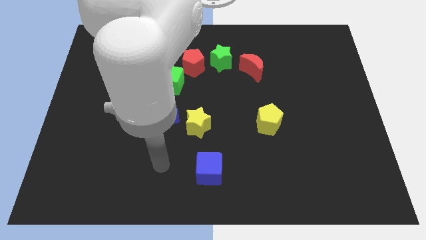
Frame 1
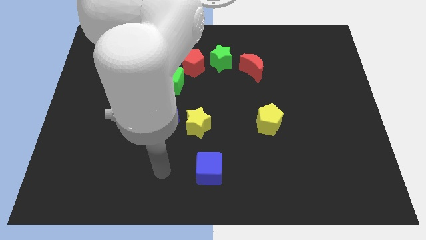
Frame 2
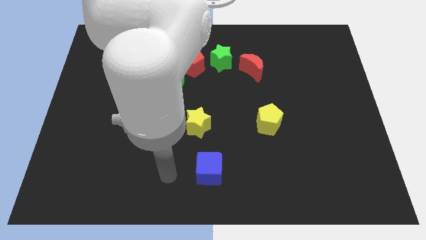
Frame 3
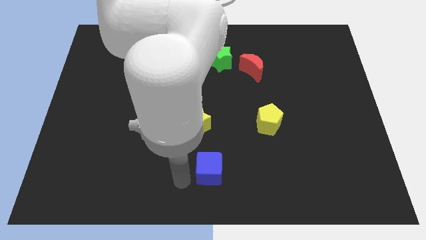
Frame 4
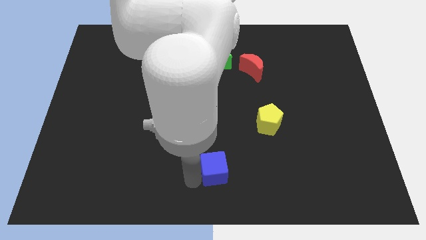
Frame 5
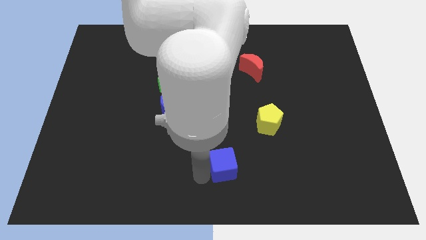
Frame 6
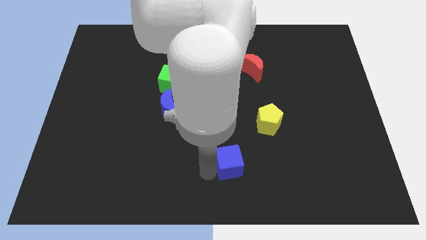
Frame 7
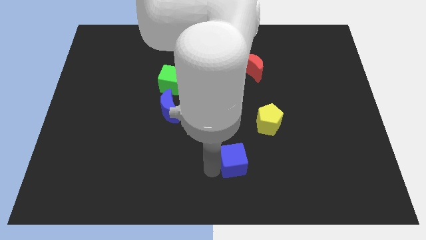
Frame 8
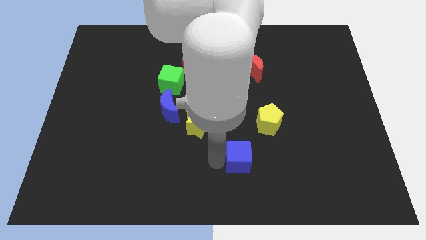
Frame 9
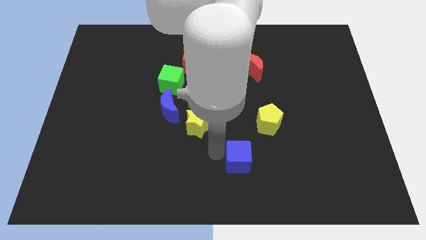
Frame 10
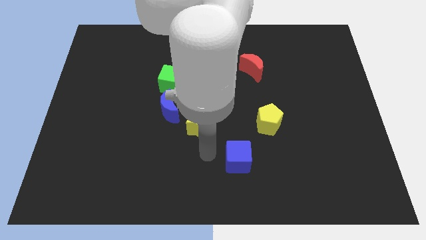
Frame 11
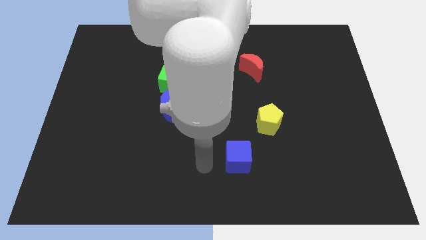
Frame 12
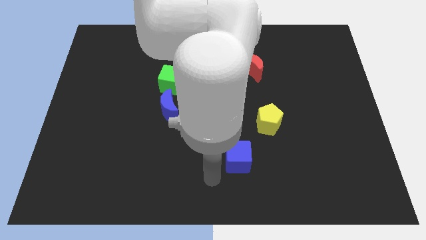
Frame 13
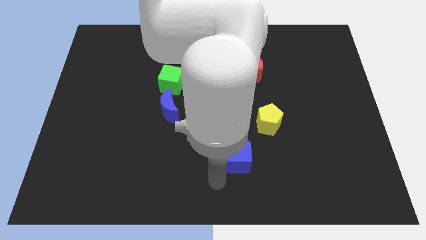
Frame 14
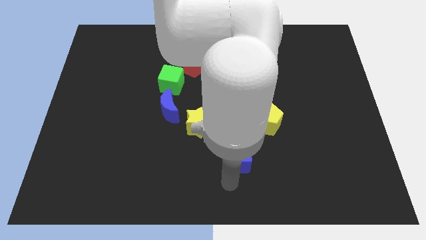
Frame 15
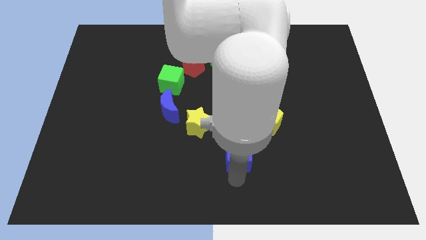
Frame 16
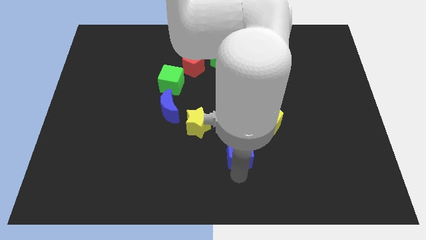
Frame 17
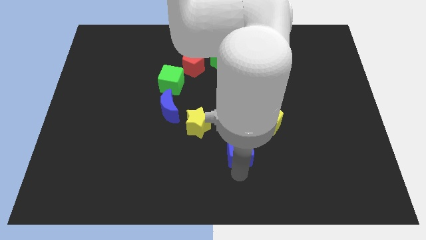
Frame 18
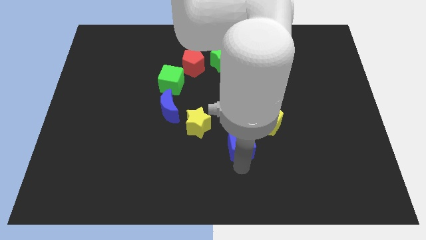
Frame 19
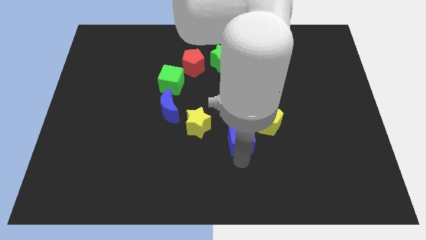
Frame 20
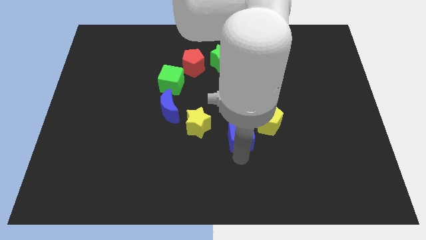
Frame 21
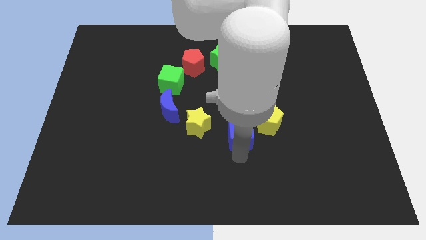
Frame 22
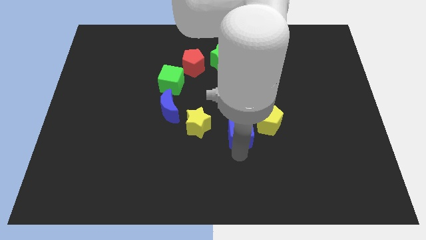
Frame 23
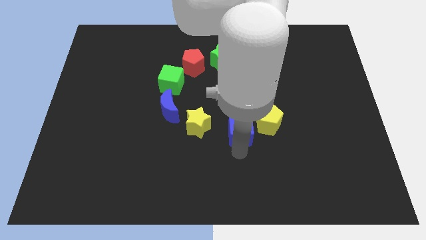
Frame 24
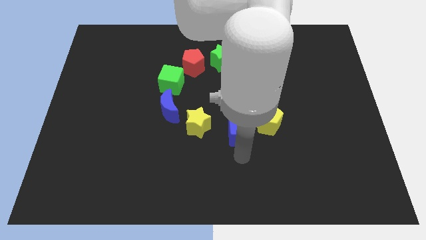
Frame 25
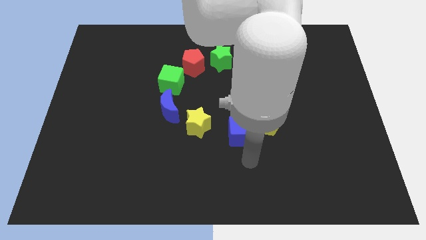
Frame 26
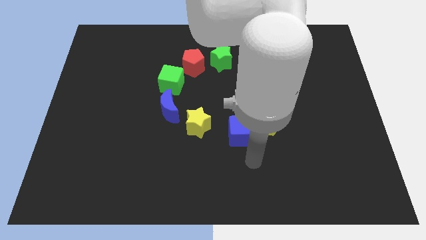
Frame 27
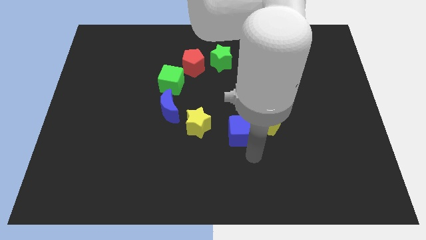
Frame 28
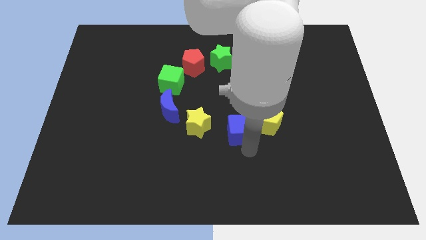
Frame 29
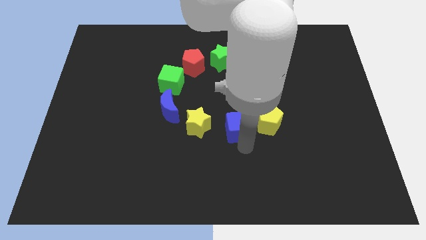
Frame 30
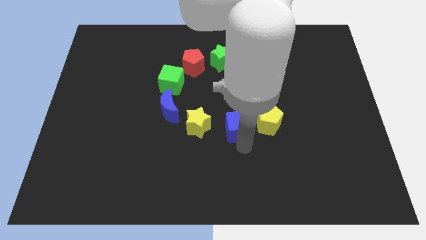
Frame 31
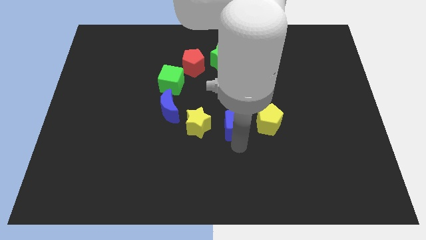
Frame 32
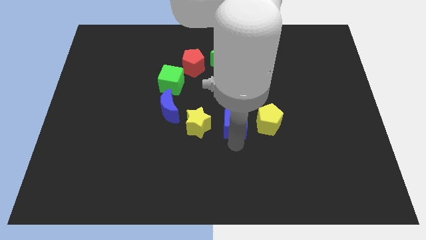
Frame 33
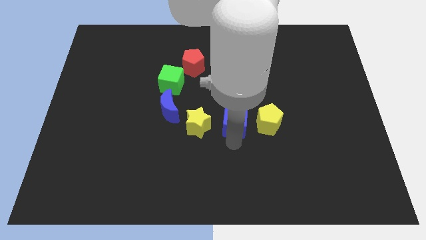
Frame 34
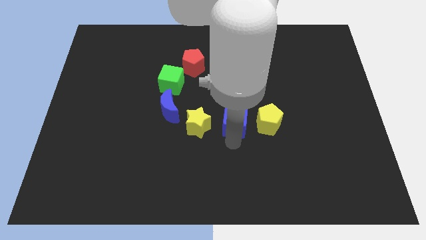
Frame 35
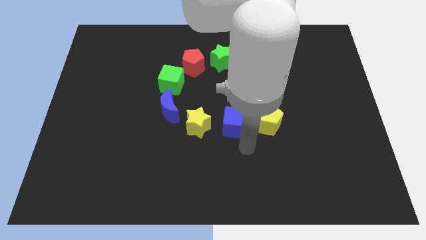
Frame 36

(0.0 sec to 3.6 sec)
move the blue cube in between of yellow star yellow pentagon

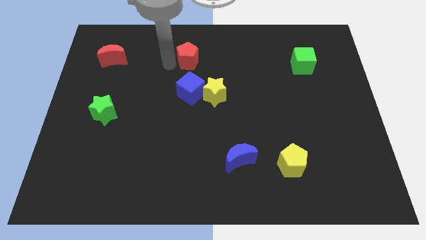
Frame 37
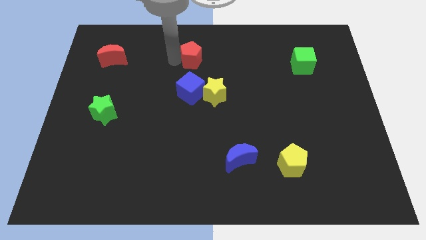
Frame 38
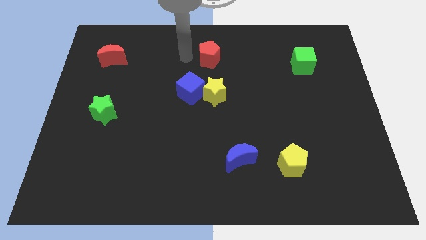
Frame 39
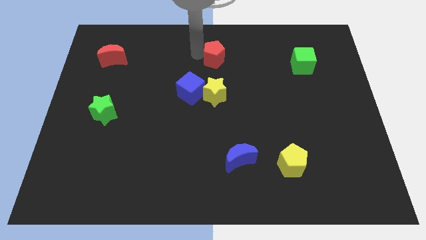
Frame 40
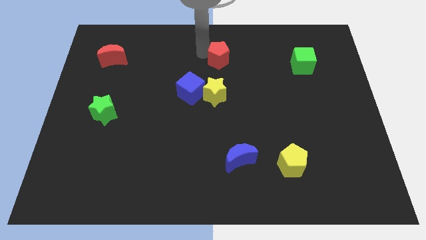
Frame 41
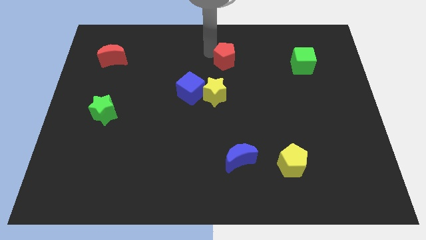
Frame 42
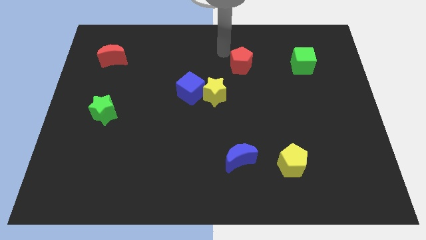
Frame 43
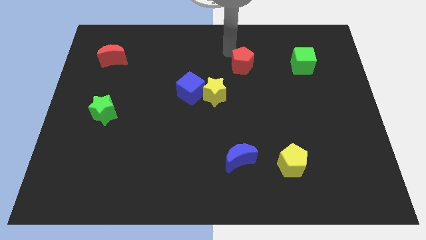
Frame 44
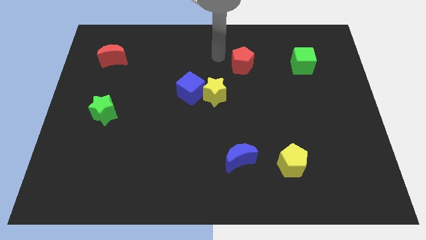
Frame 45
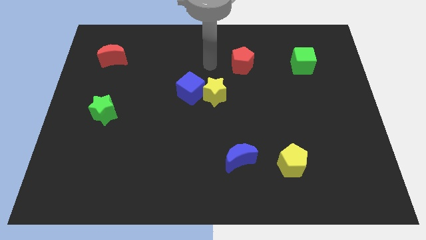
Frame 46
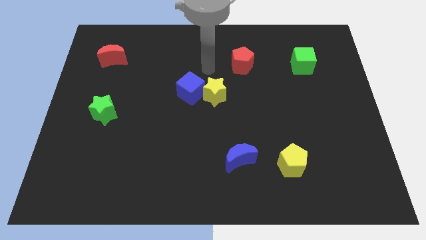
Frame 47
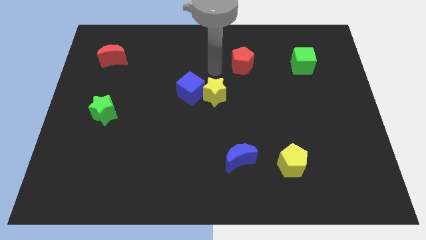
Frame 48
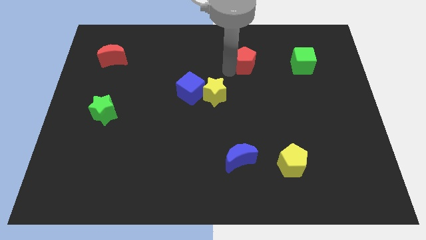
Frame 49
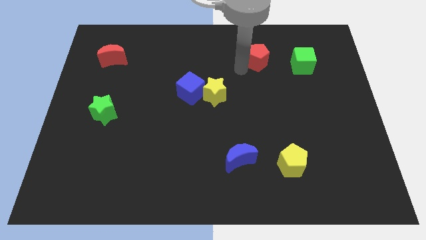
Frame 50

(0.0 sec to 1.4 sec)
push the red pentagon towards the left side of the green cube

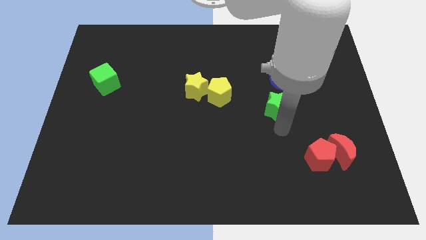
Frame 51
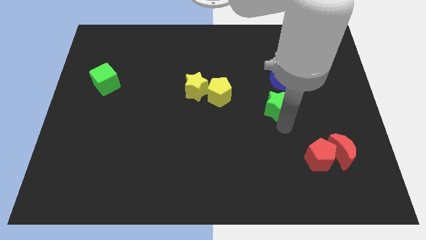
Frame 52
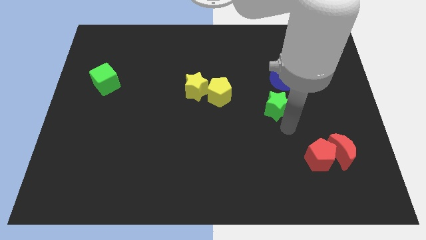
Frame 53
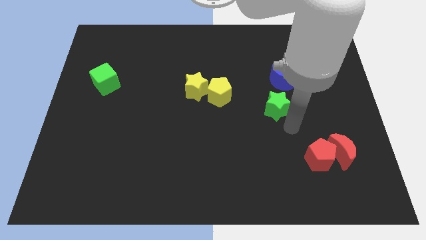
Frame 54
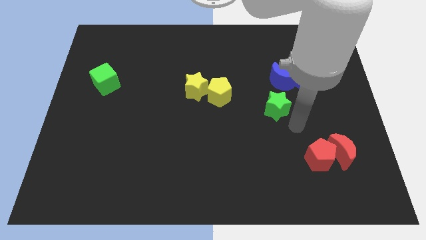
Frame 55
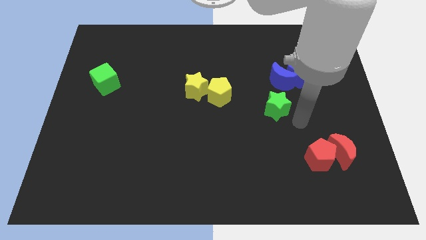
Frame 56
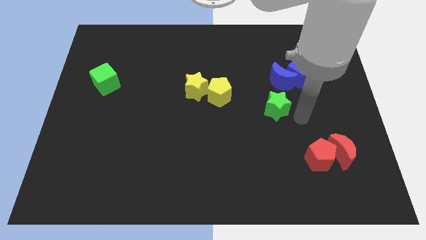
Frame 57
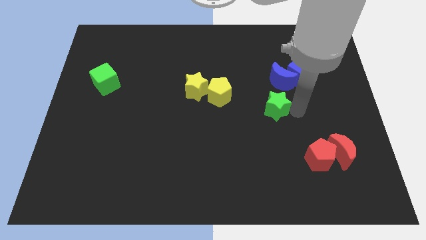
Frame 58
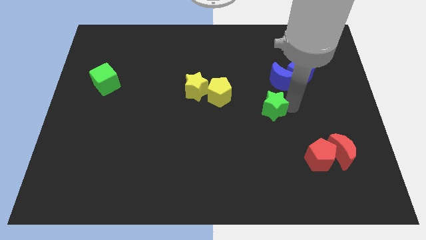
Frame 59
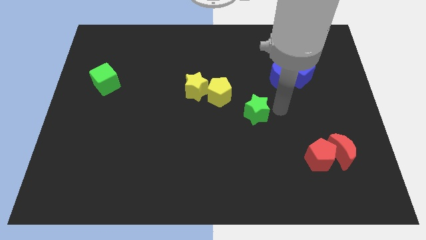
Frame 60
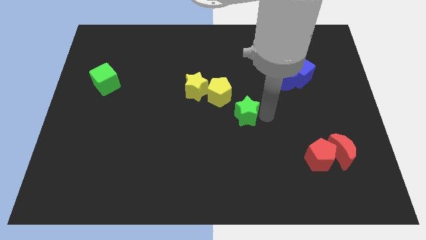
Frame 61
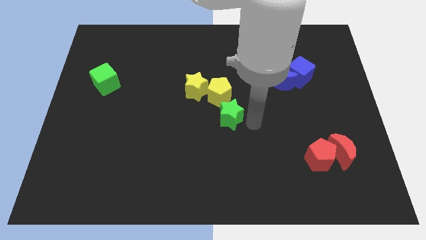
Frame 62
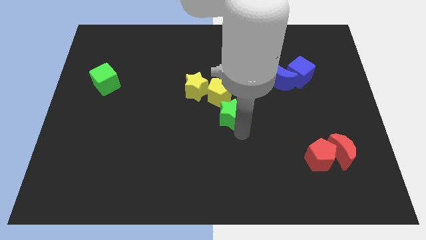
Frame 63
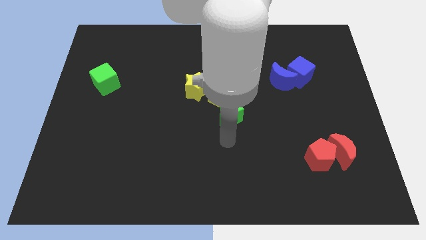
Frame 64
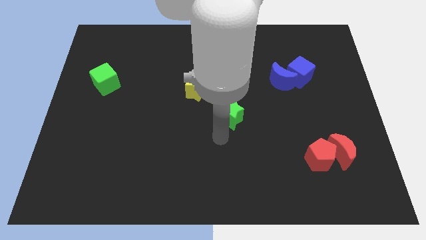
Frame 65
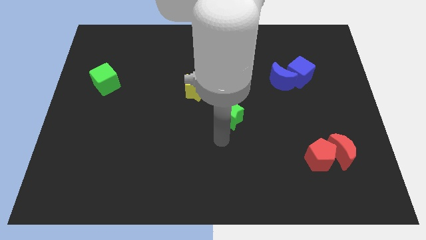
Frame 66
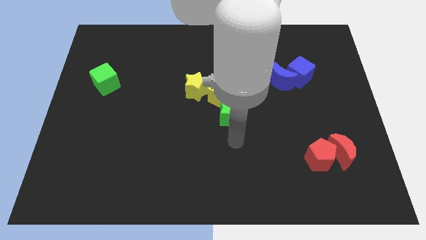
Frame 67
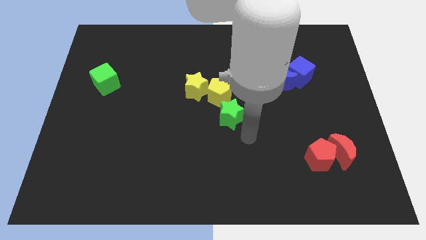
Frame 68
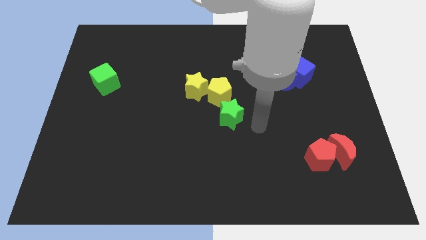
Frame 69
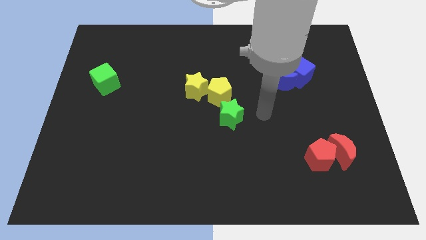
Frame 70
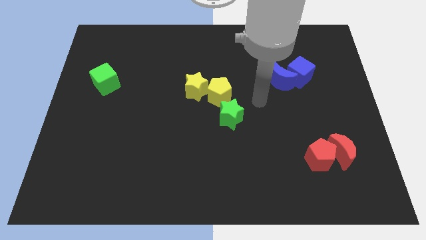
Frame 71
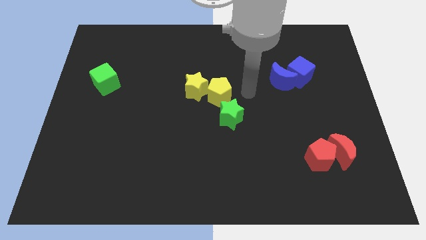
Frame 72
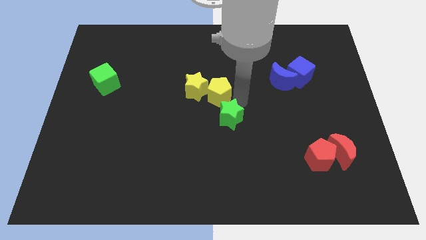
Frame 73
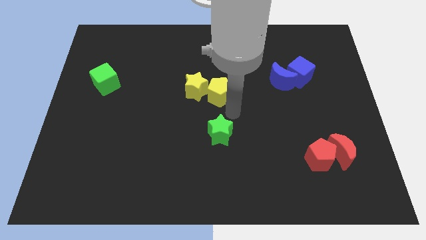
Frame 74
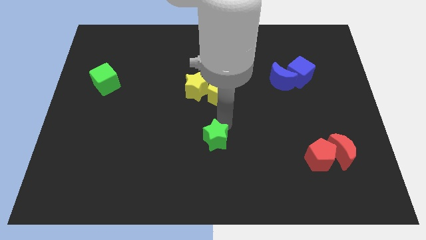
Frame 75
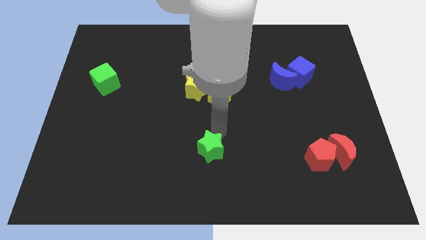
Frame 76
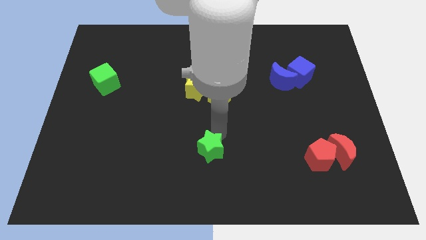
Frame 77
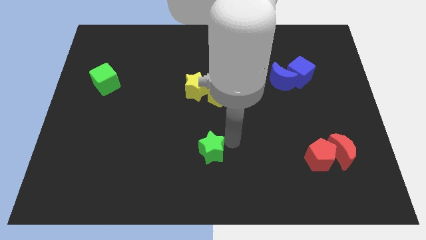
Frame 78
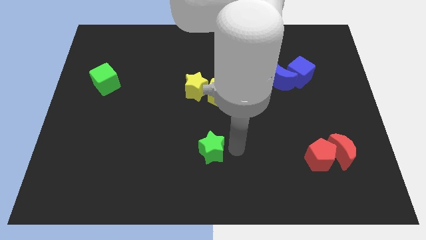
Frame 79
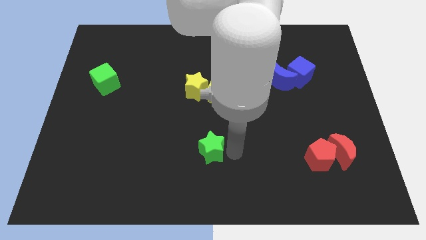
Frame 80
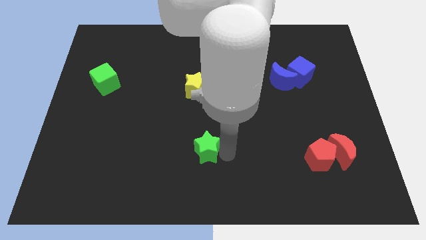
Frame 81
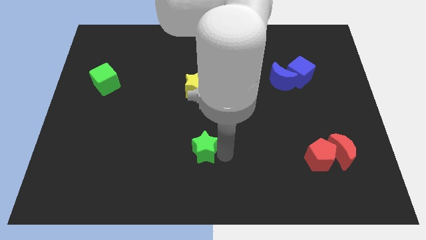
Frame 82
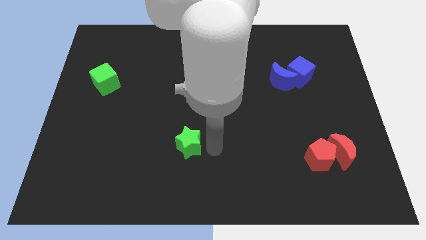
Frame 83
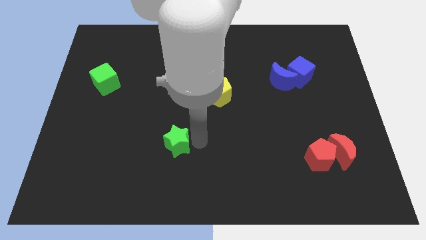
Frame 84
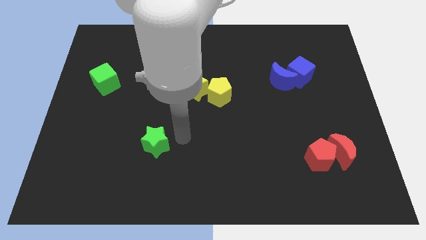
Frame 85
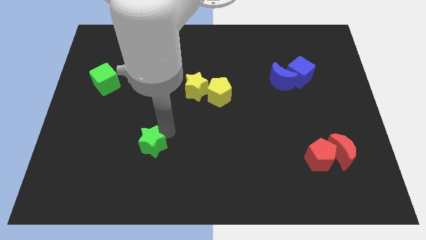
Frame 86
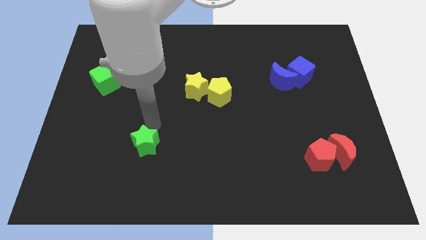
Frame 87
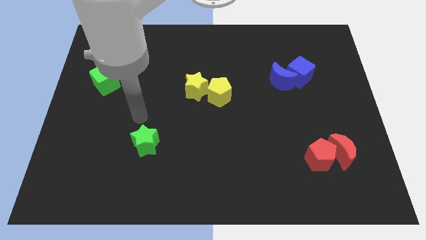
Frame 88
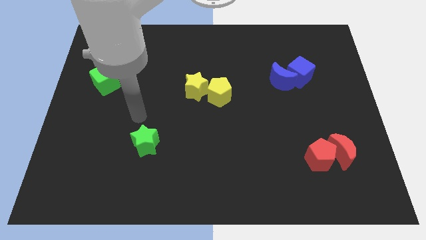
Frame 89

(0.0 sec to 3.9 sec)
push the green star towards the left of the board
